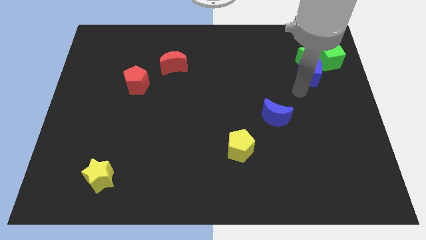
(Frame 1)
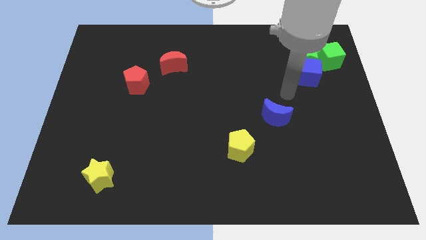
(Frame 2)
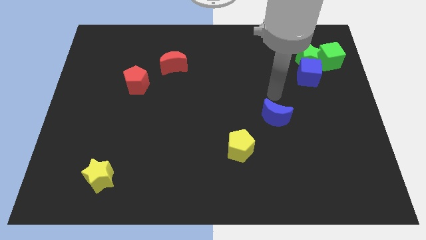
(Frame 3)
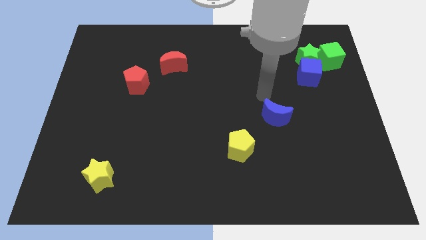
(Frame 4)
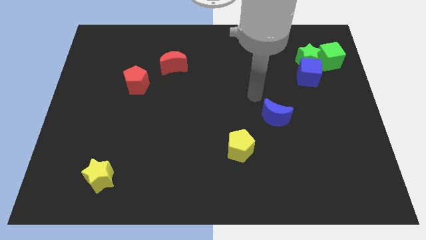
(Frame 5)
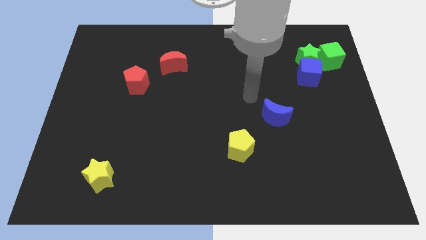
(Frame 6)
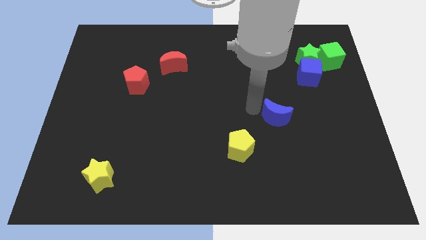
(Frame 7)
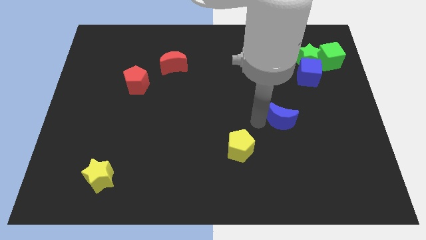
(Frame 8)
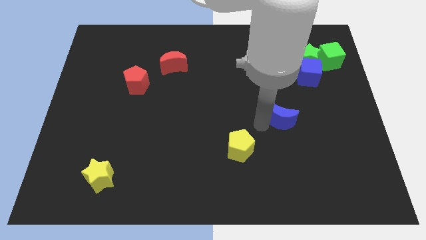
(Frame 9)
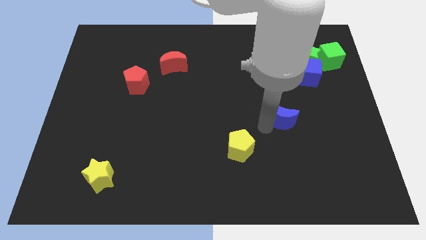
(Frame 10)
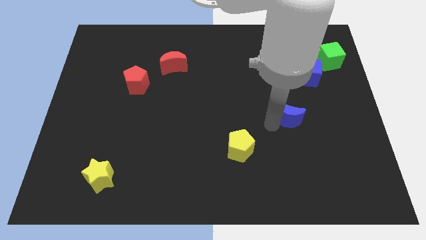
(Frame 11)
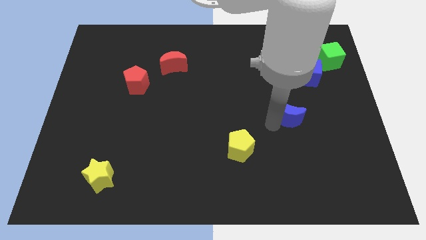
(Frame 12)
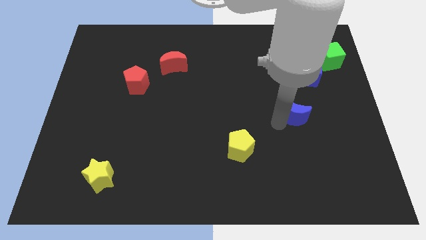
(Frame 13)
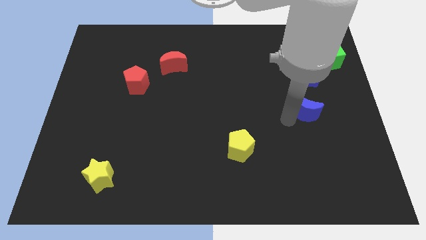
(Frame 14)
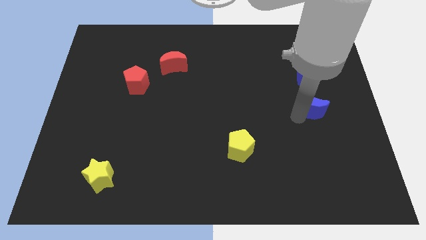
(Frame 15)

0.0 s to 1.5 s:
place the blue moon below the blue cube

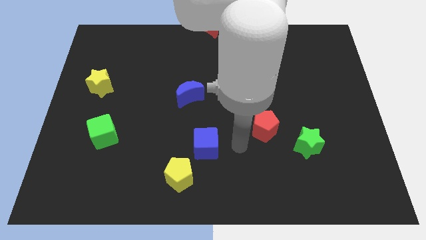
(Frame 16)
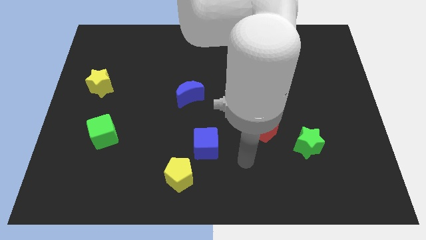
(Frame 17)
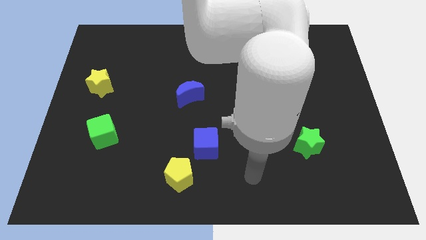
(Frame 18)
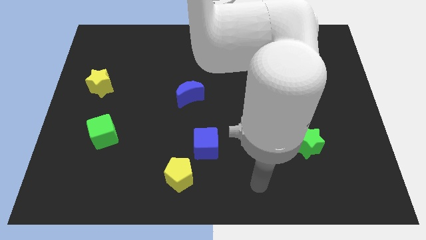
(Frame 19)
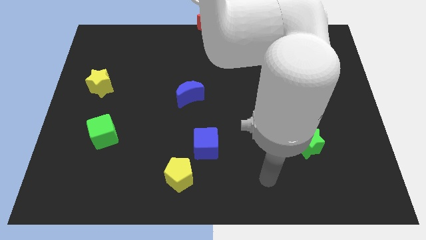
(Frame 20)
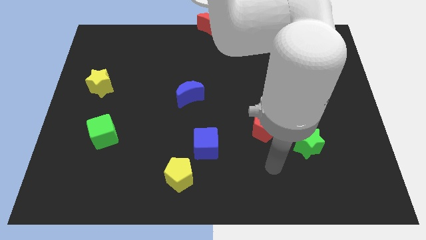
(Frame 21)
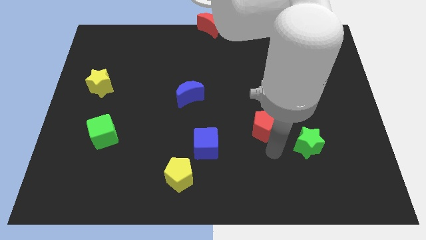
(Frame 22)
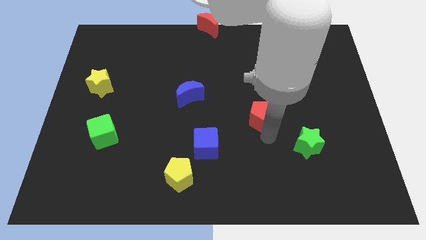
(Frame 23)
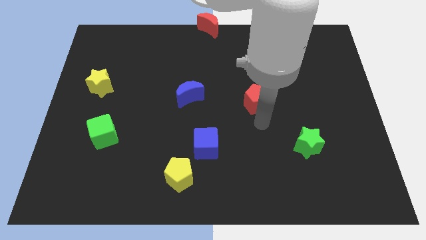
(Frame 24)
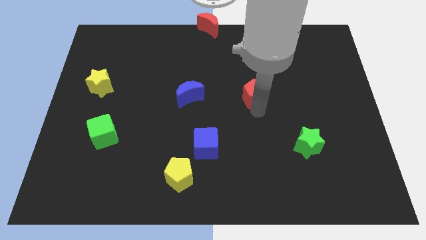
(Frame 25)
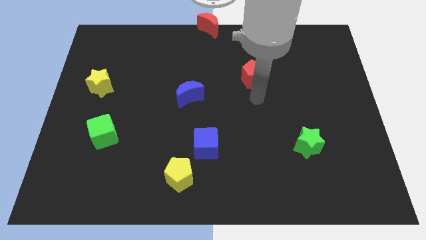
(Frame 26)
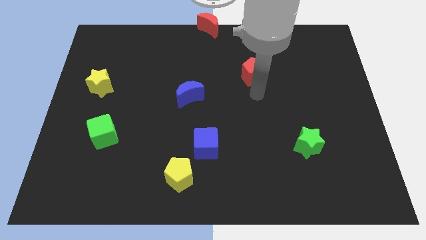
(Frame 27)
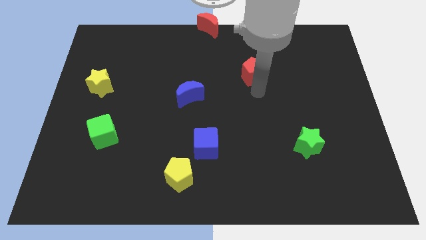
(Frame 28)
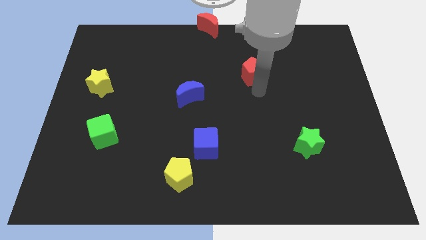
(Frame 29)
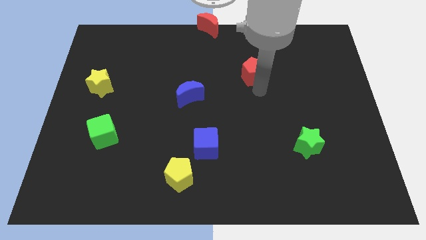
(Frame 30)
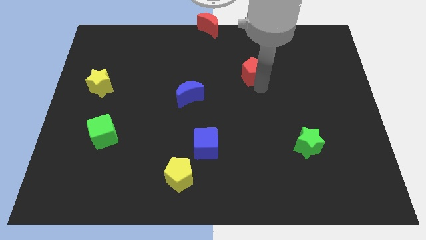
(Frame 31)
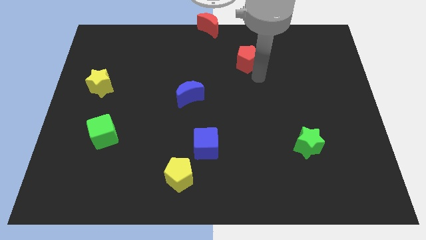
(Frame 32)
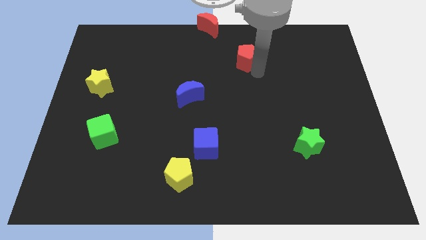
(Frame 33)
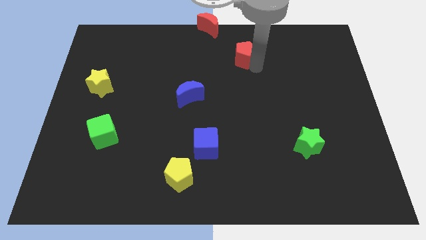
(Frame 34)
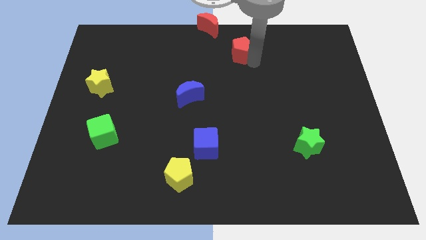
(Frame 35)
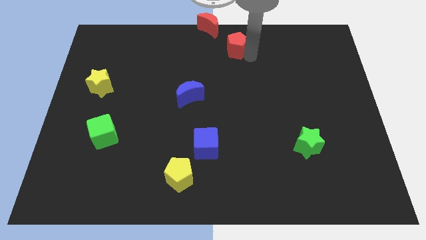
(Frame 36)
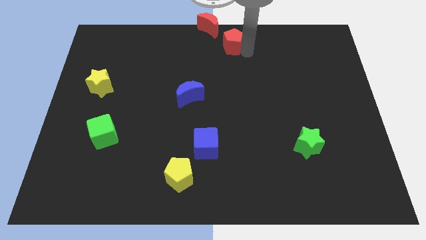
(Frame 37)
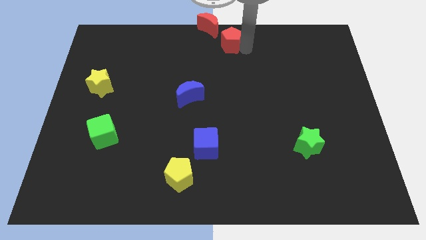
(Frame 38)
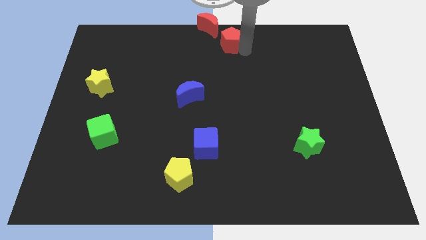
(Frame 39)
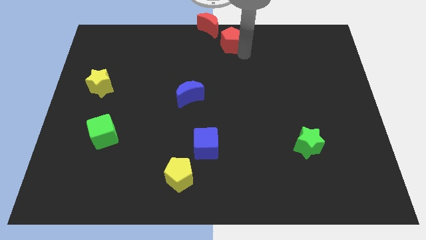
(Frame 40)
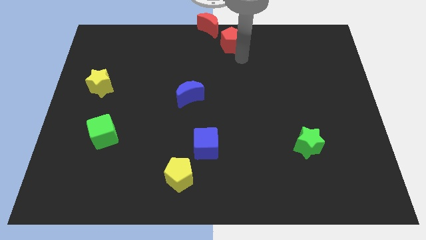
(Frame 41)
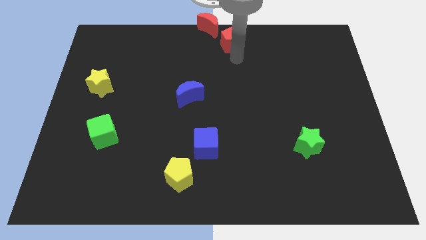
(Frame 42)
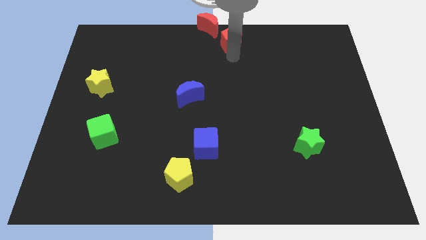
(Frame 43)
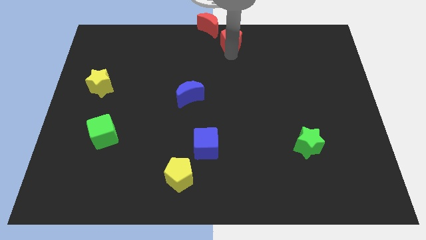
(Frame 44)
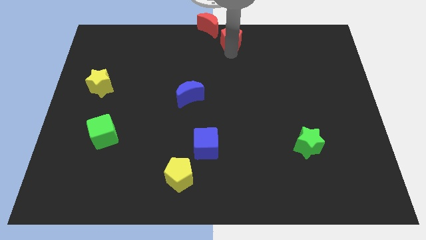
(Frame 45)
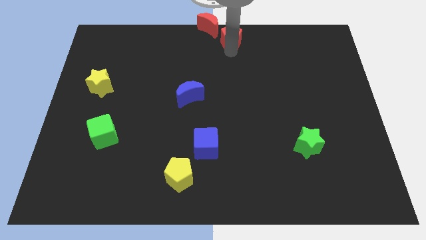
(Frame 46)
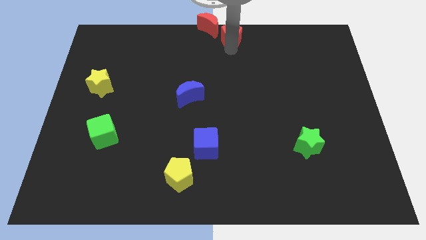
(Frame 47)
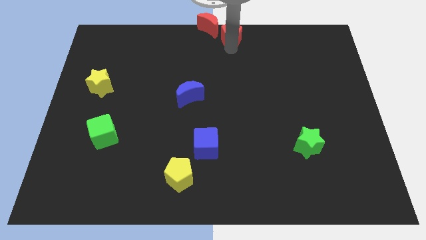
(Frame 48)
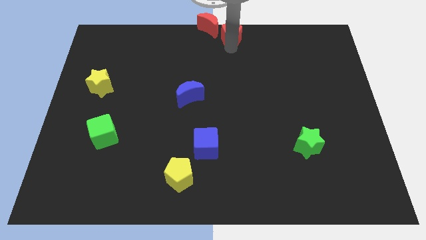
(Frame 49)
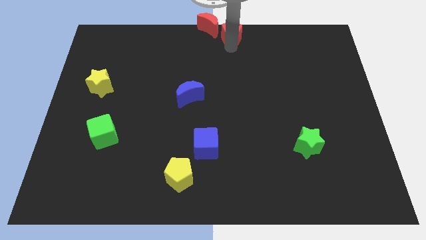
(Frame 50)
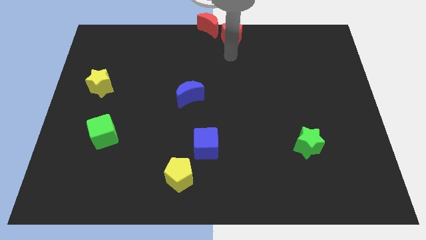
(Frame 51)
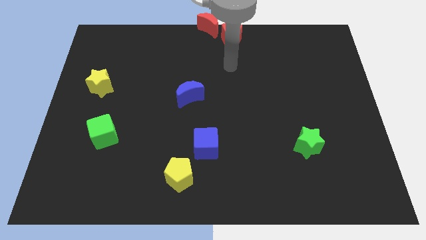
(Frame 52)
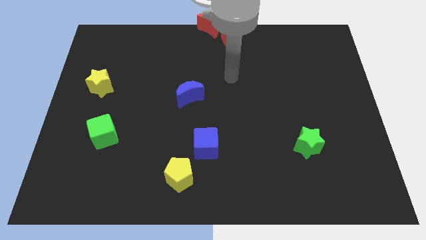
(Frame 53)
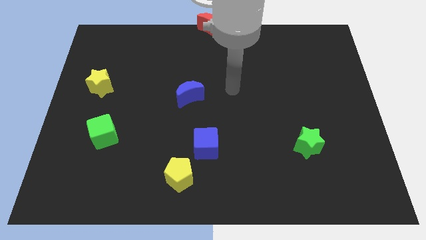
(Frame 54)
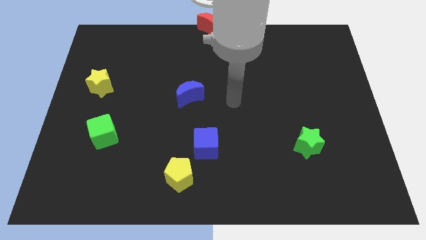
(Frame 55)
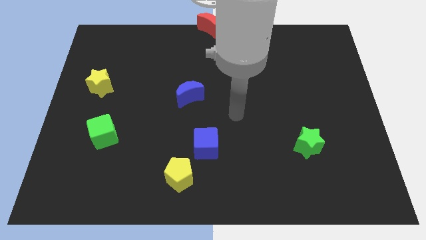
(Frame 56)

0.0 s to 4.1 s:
push the red pentagon to the right side of the red crescent

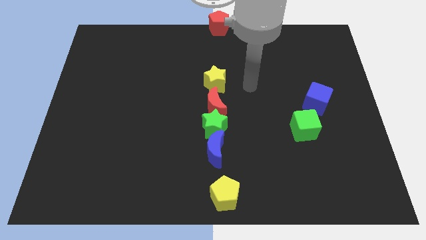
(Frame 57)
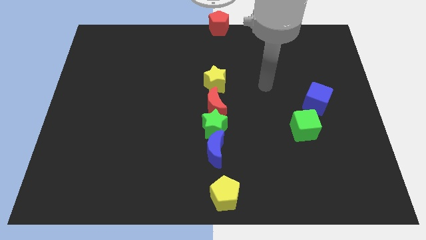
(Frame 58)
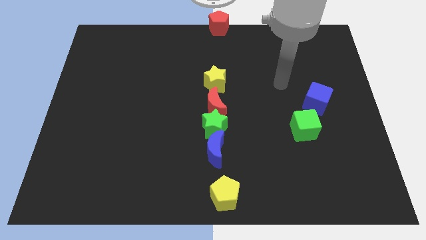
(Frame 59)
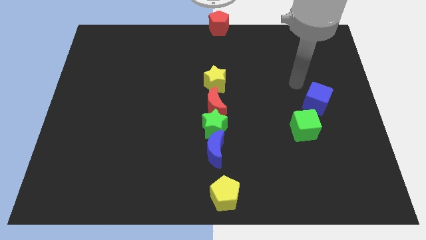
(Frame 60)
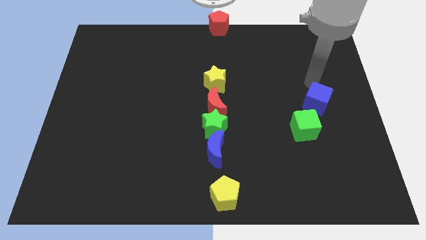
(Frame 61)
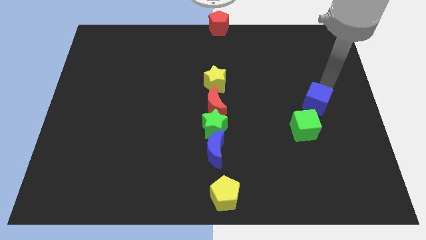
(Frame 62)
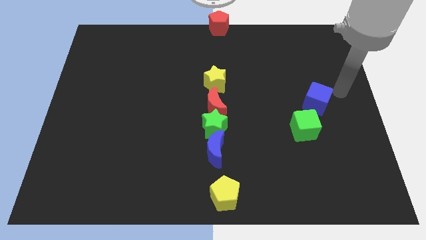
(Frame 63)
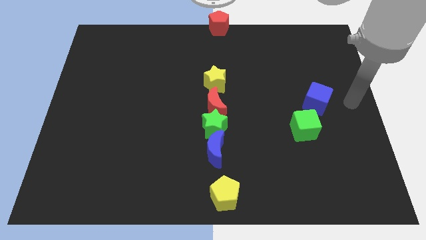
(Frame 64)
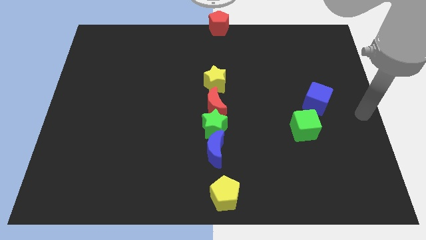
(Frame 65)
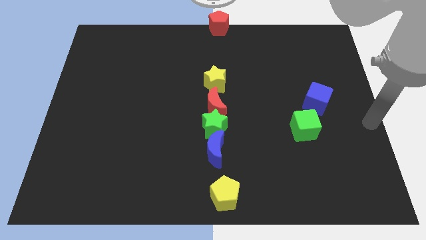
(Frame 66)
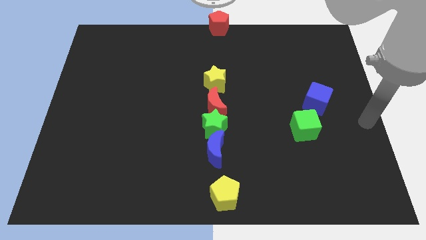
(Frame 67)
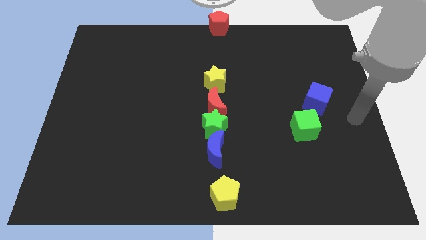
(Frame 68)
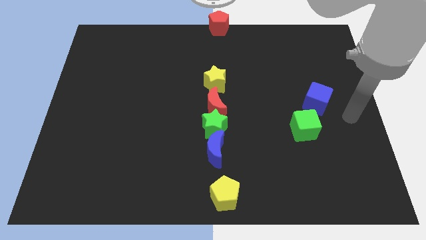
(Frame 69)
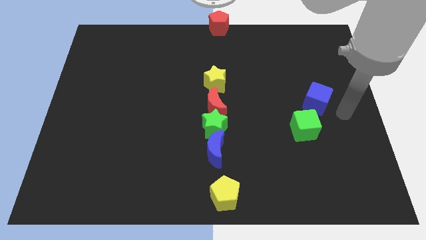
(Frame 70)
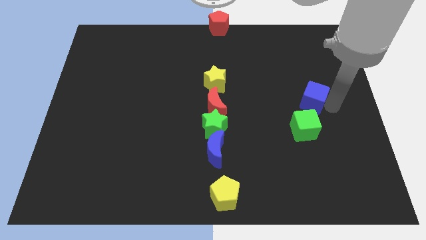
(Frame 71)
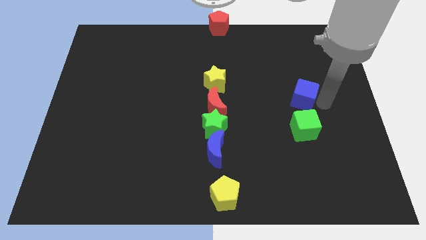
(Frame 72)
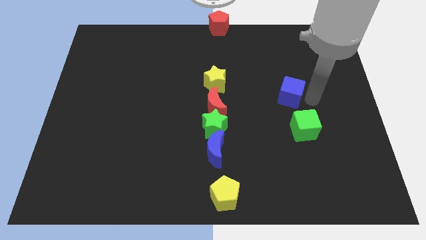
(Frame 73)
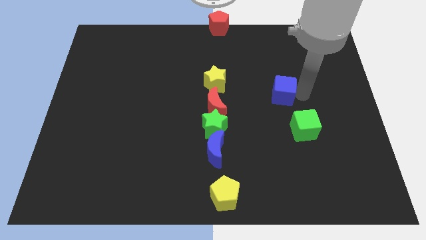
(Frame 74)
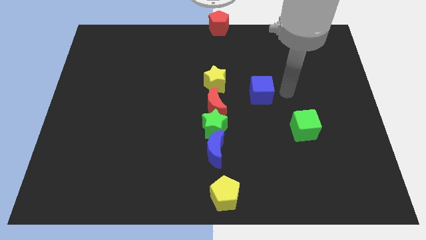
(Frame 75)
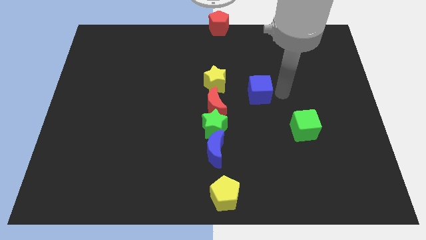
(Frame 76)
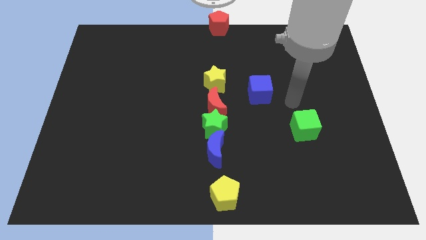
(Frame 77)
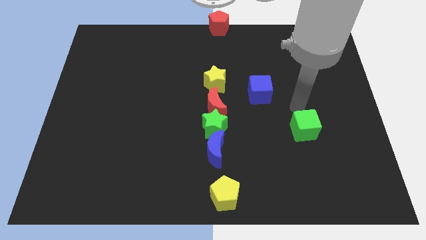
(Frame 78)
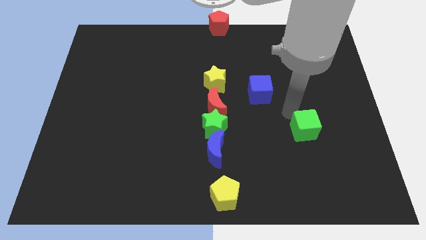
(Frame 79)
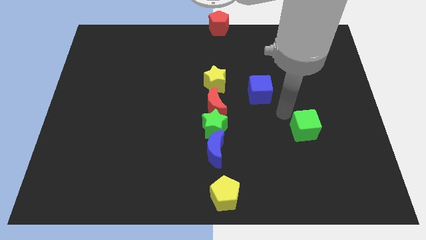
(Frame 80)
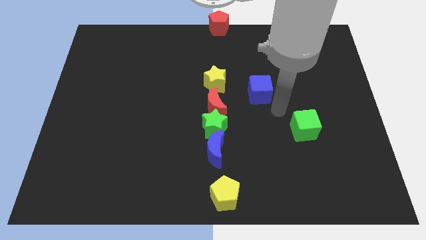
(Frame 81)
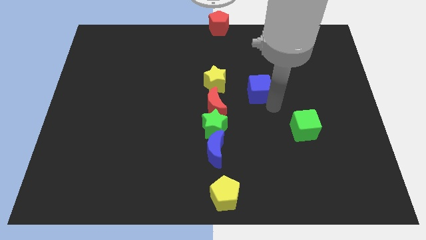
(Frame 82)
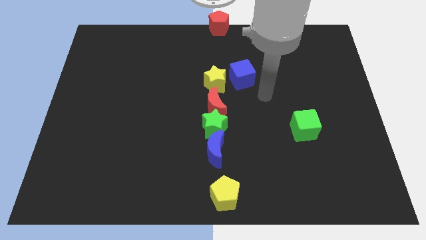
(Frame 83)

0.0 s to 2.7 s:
put the blue cube diagonal top right to red moon

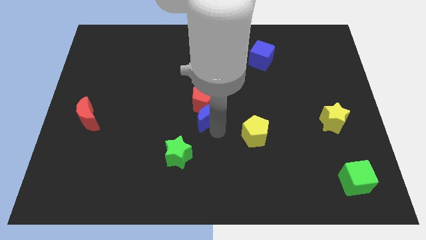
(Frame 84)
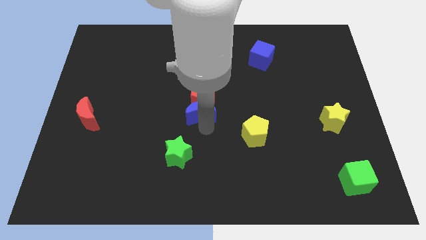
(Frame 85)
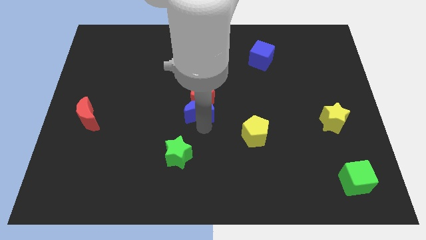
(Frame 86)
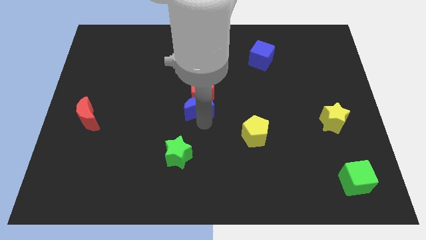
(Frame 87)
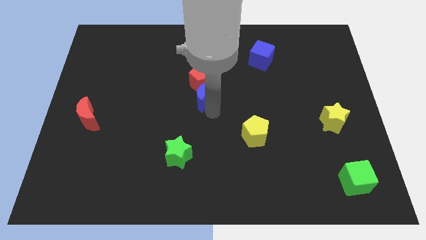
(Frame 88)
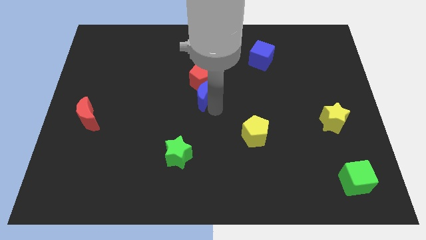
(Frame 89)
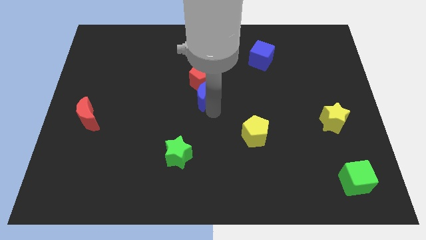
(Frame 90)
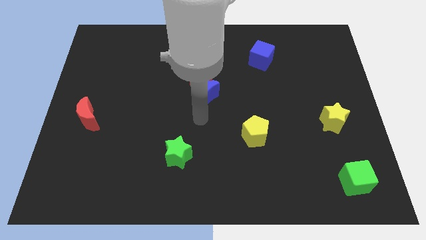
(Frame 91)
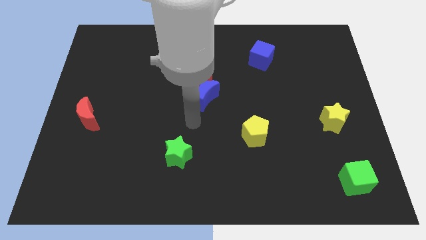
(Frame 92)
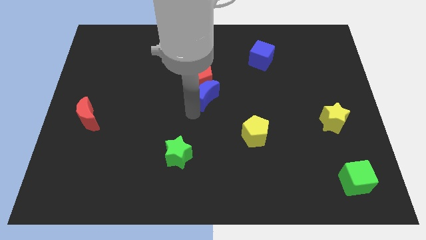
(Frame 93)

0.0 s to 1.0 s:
push the red pentagon towards the top center with the help of the blue crescent
